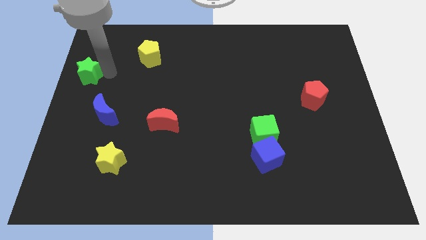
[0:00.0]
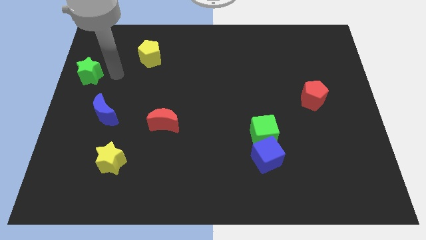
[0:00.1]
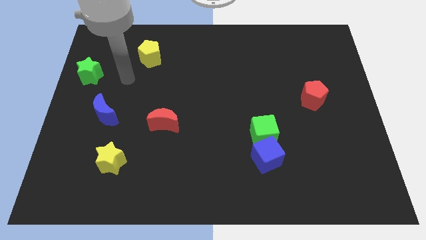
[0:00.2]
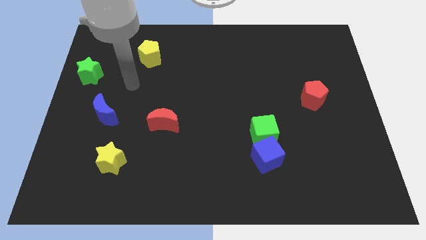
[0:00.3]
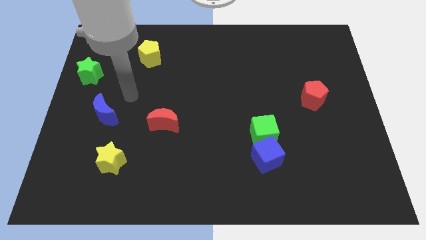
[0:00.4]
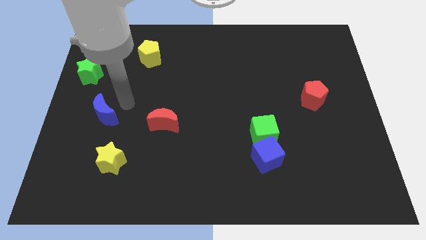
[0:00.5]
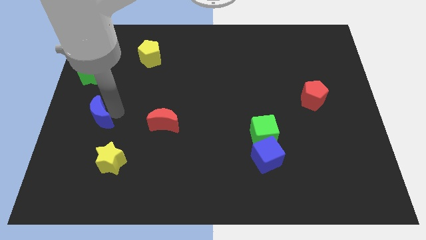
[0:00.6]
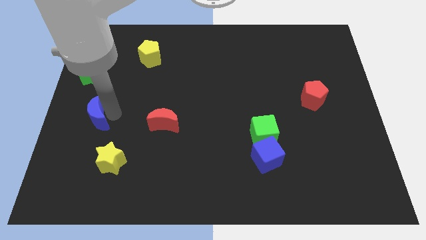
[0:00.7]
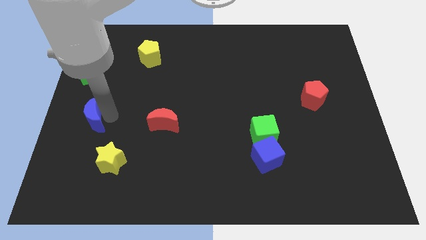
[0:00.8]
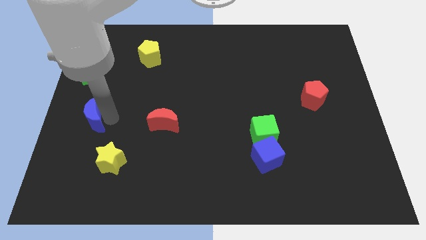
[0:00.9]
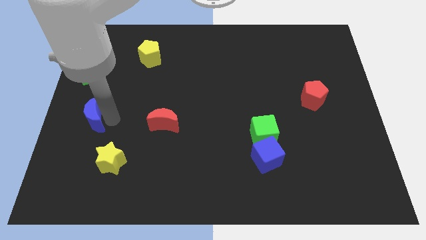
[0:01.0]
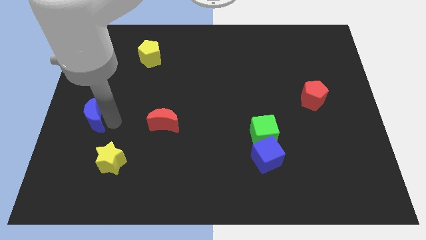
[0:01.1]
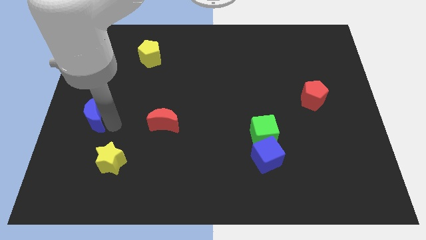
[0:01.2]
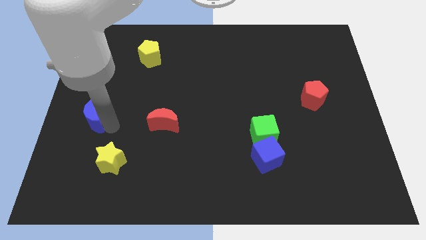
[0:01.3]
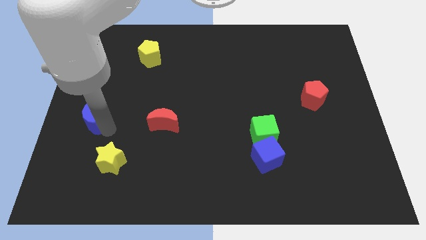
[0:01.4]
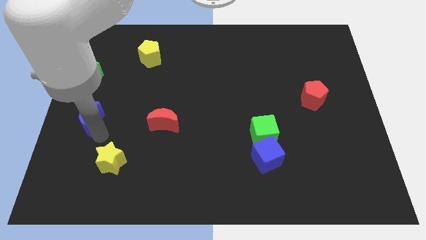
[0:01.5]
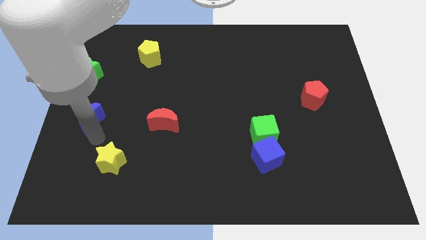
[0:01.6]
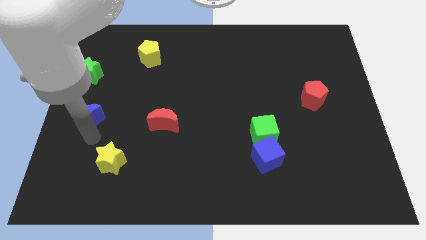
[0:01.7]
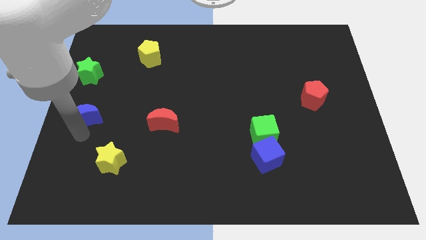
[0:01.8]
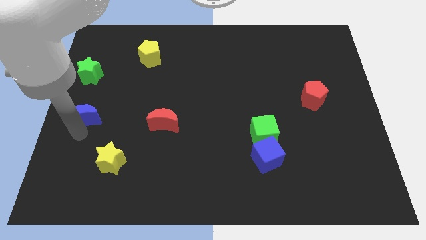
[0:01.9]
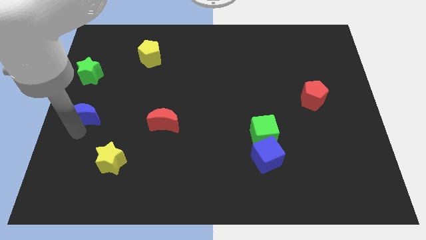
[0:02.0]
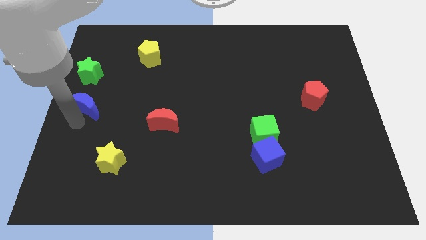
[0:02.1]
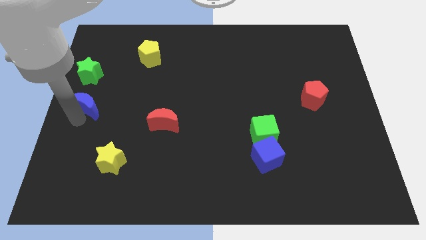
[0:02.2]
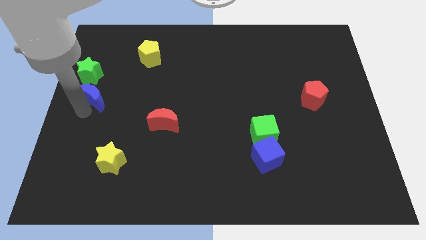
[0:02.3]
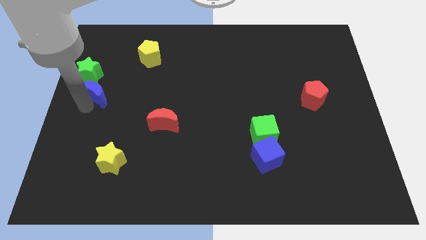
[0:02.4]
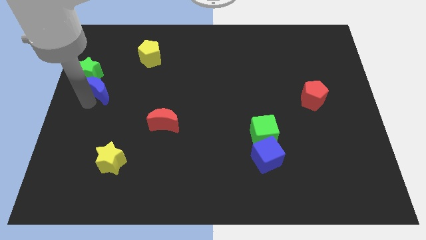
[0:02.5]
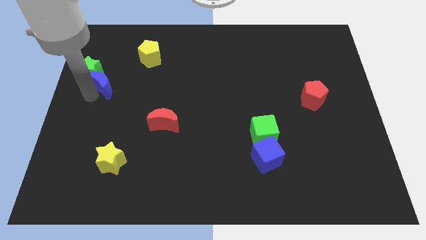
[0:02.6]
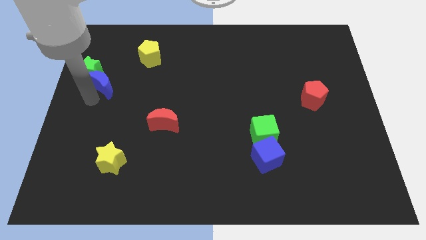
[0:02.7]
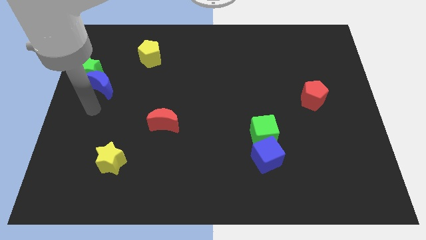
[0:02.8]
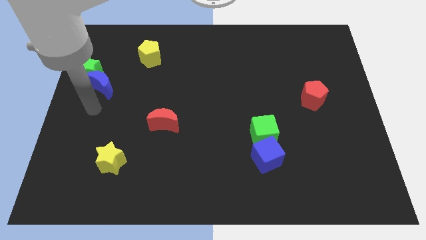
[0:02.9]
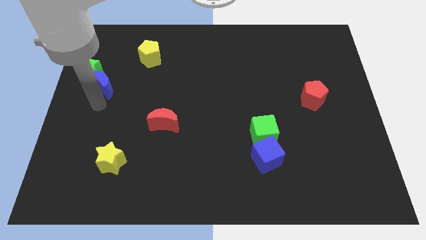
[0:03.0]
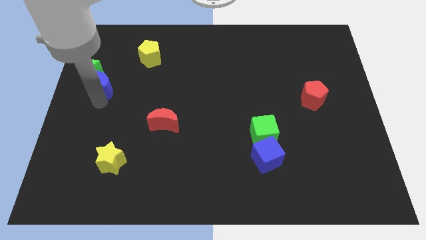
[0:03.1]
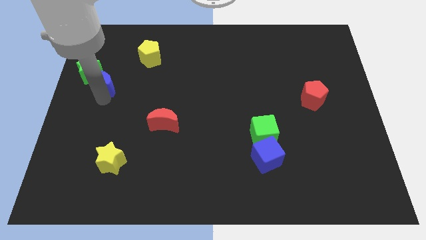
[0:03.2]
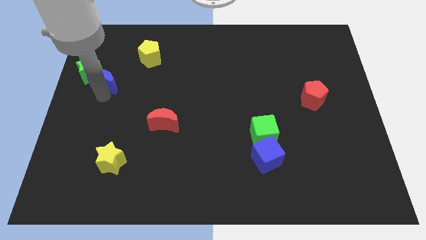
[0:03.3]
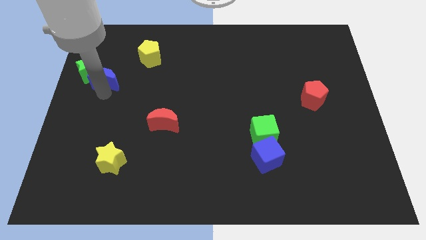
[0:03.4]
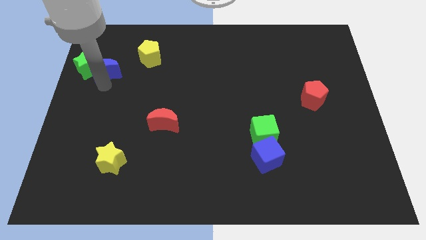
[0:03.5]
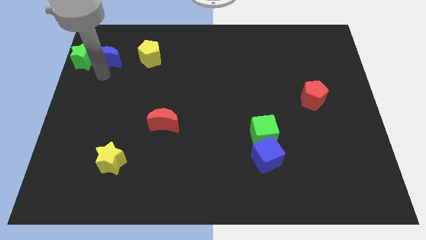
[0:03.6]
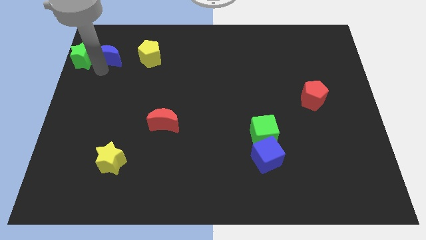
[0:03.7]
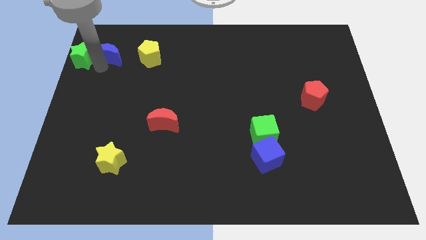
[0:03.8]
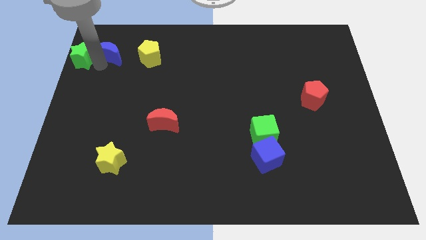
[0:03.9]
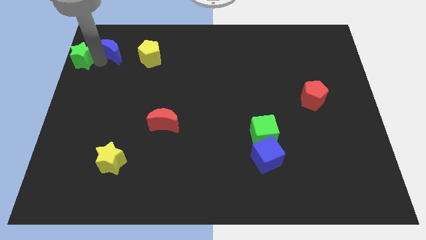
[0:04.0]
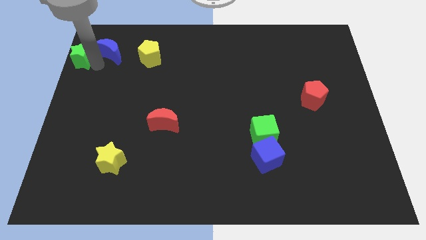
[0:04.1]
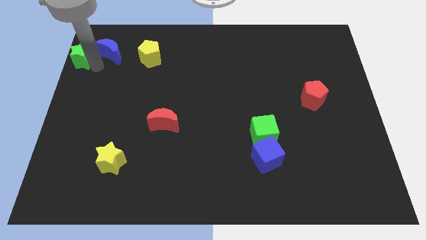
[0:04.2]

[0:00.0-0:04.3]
place the green star and blue crescent towards top left

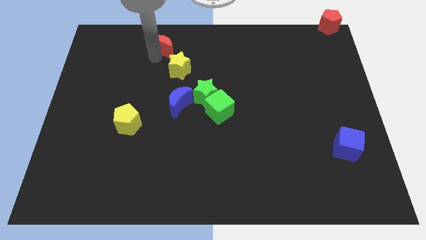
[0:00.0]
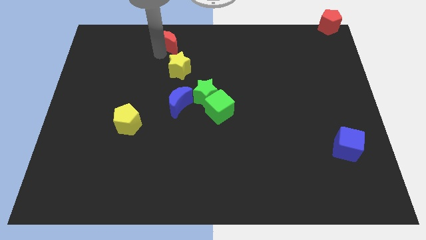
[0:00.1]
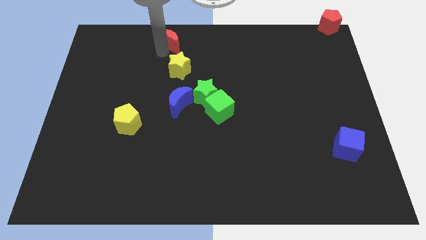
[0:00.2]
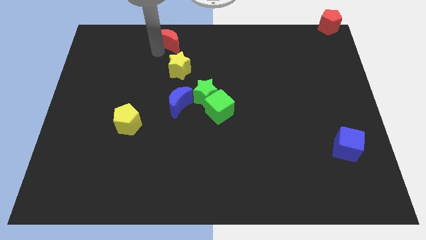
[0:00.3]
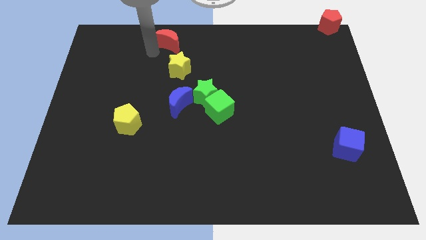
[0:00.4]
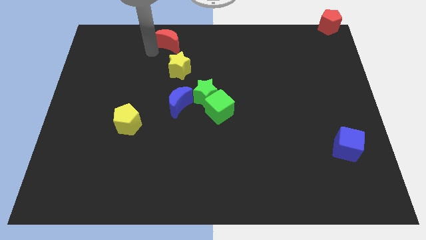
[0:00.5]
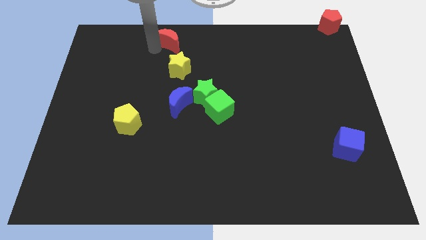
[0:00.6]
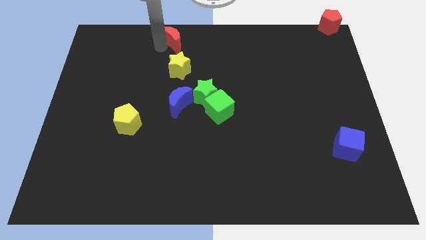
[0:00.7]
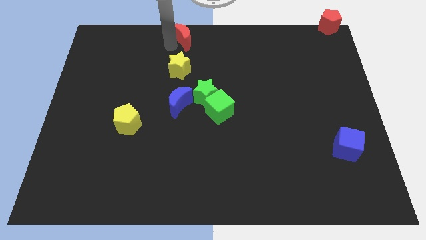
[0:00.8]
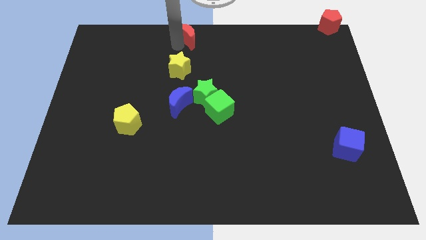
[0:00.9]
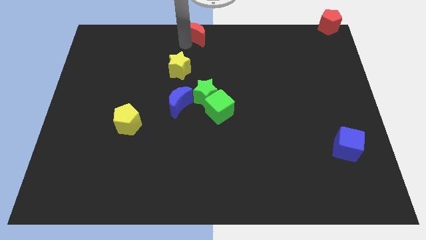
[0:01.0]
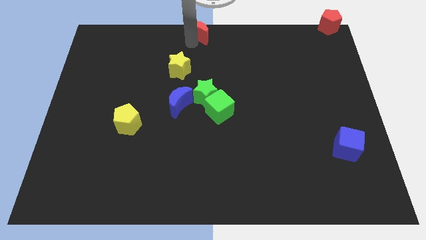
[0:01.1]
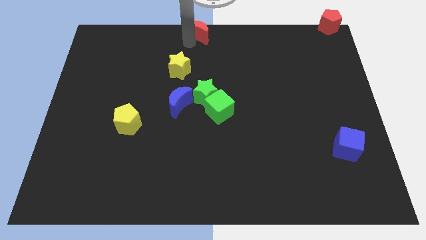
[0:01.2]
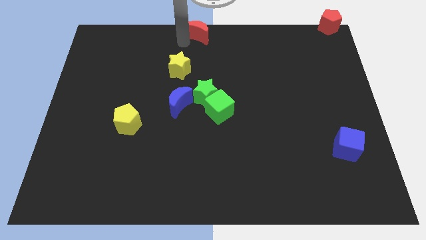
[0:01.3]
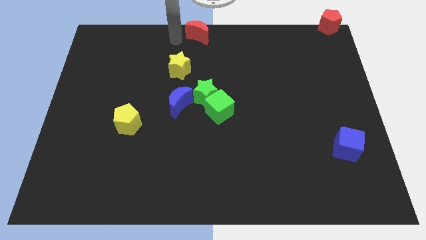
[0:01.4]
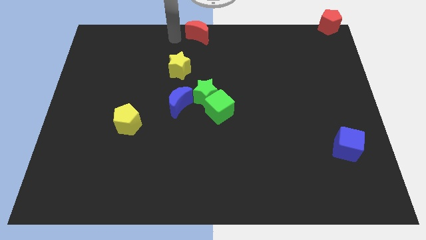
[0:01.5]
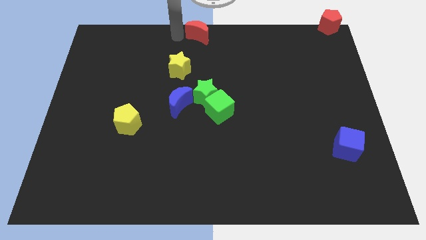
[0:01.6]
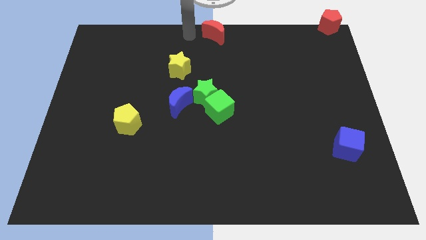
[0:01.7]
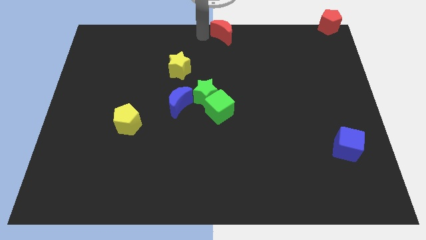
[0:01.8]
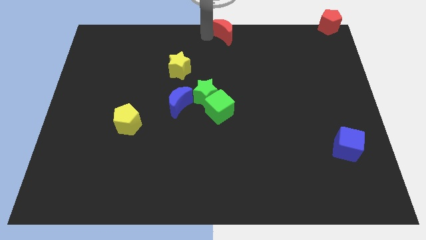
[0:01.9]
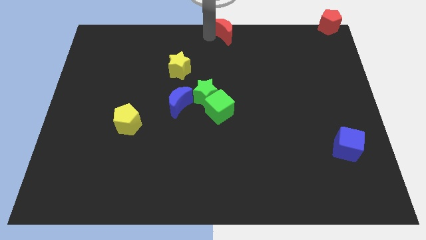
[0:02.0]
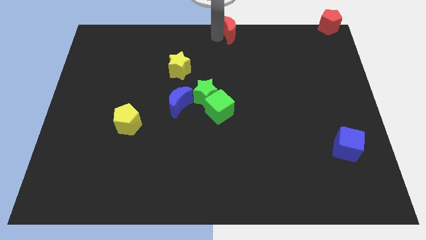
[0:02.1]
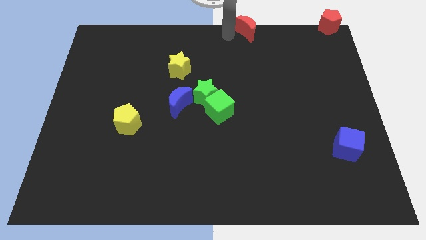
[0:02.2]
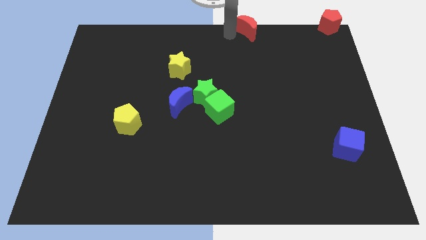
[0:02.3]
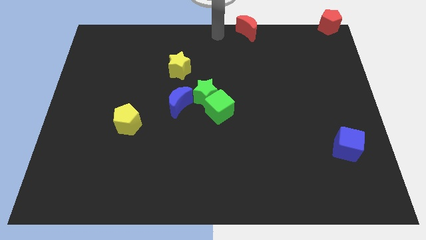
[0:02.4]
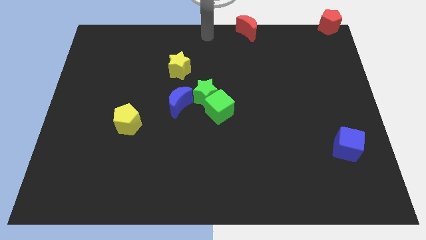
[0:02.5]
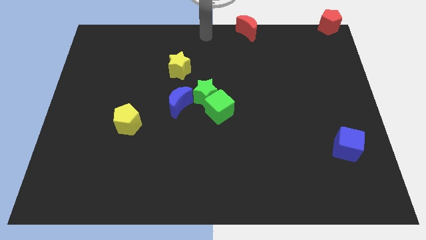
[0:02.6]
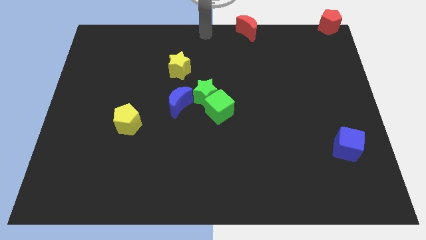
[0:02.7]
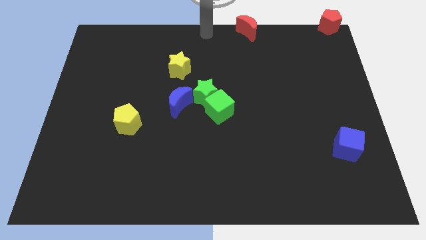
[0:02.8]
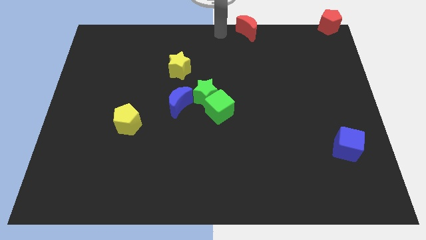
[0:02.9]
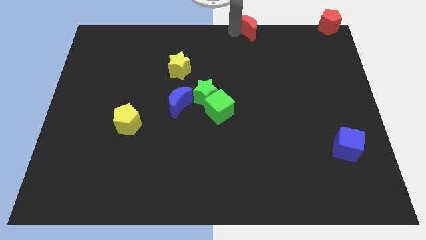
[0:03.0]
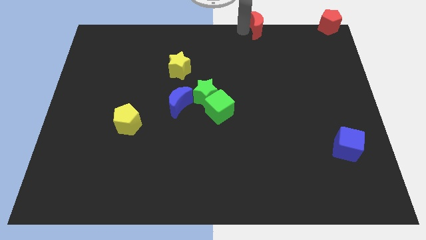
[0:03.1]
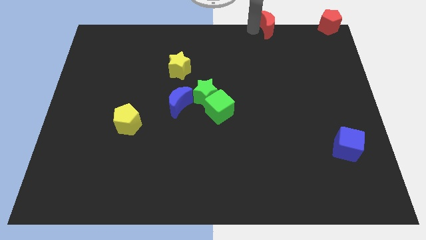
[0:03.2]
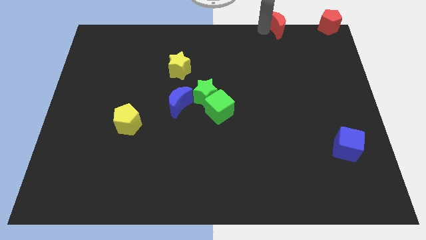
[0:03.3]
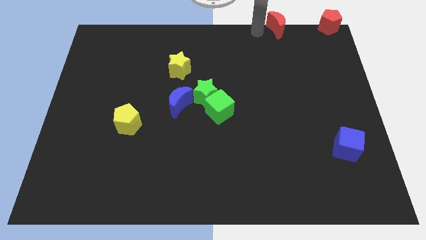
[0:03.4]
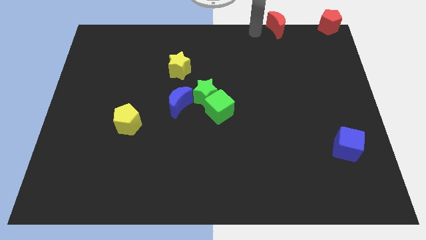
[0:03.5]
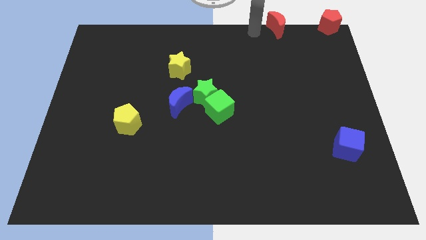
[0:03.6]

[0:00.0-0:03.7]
drag the red moon towards the red pentagon

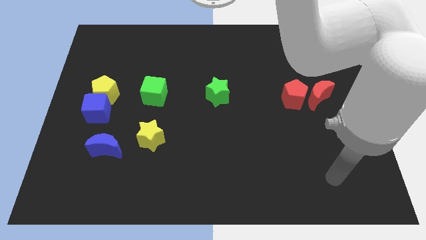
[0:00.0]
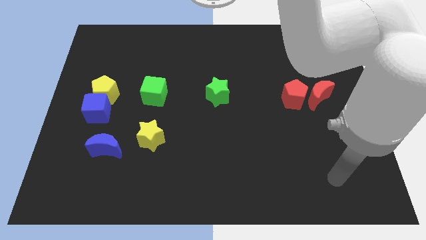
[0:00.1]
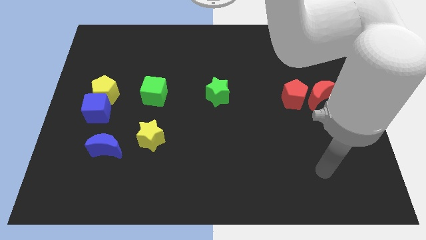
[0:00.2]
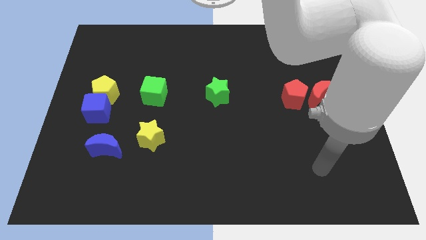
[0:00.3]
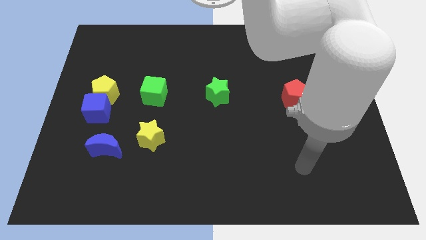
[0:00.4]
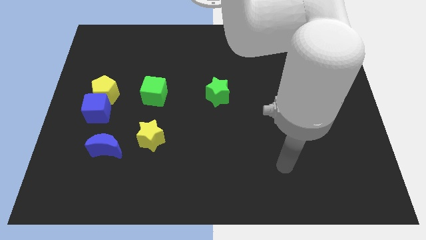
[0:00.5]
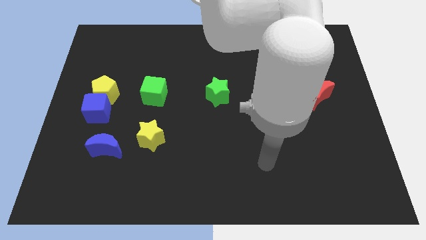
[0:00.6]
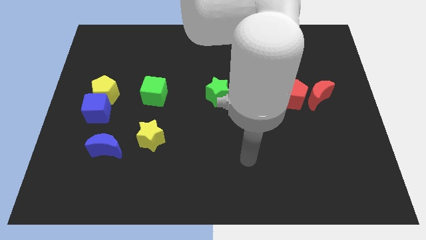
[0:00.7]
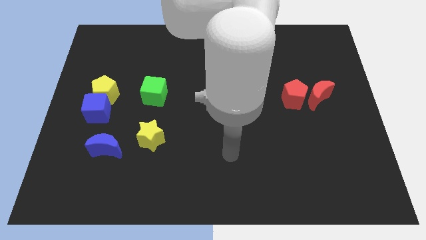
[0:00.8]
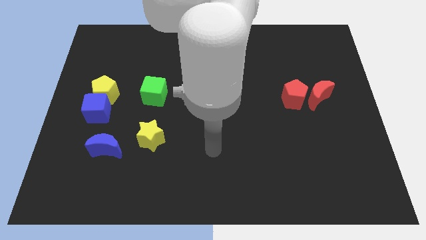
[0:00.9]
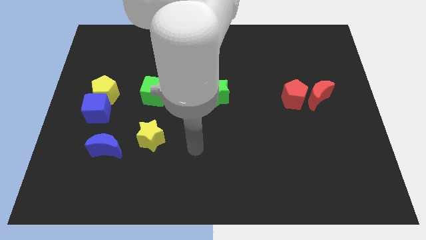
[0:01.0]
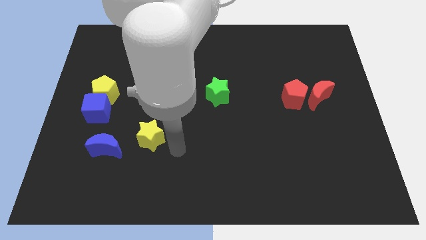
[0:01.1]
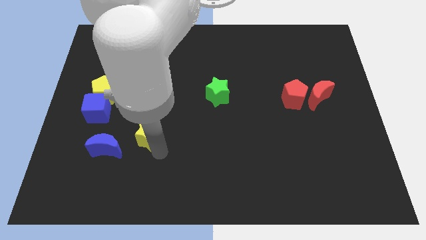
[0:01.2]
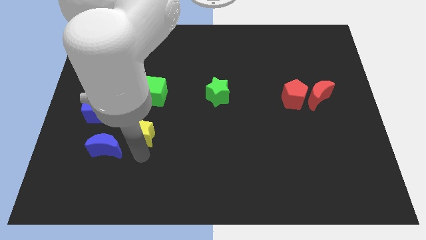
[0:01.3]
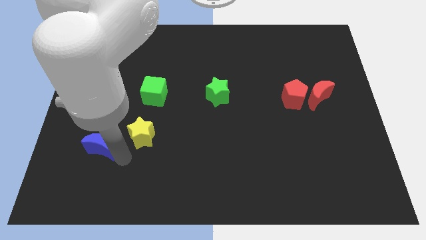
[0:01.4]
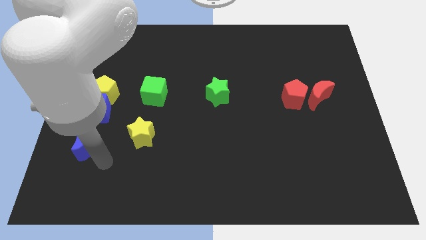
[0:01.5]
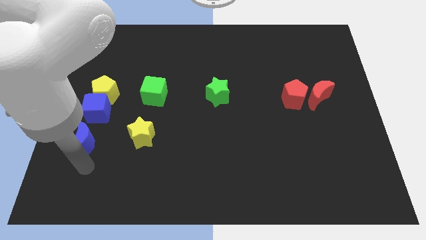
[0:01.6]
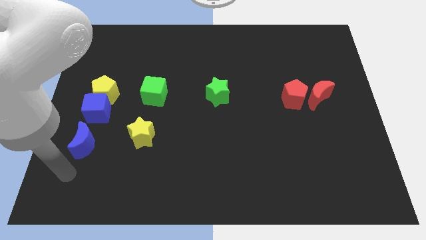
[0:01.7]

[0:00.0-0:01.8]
slightly move the blue crescent to the left of the board
